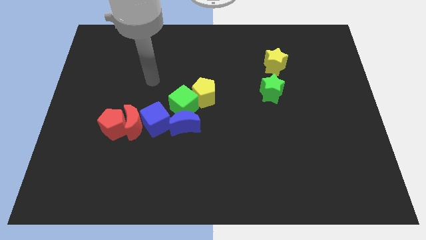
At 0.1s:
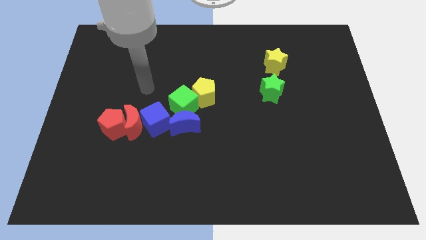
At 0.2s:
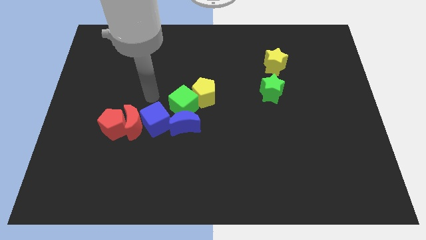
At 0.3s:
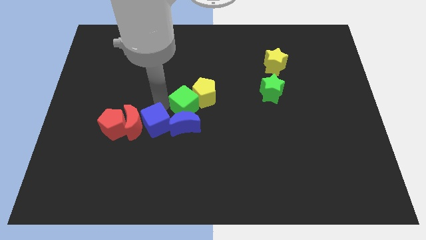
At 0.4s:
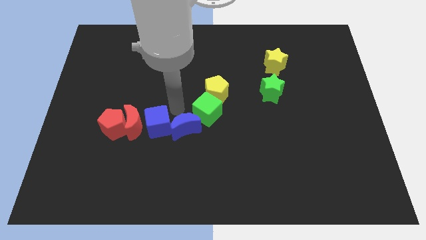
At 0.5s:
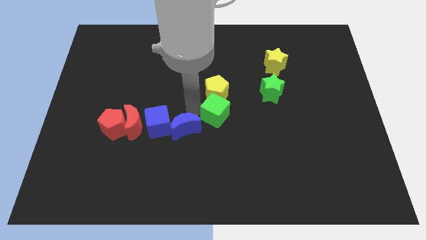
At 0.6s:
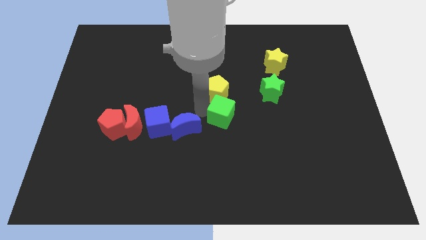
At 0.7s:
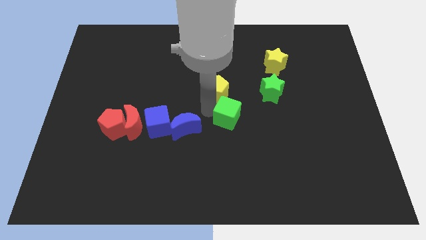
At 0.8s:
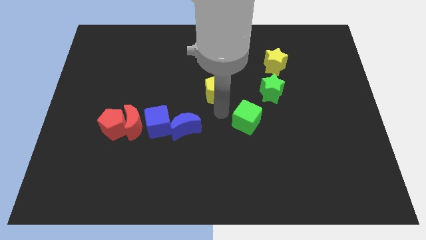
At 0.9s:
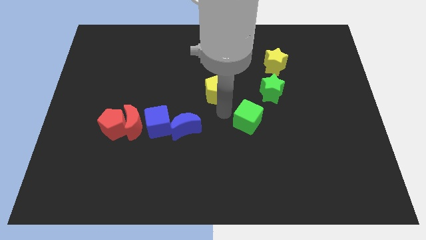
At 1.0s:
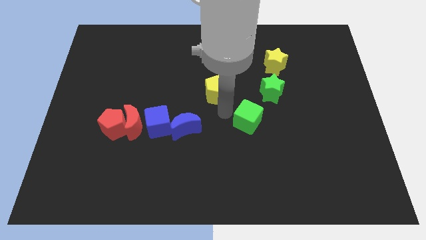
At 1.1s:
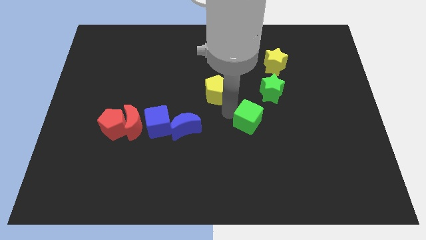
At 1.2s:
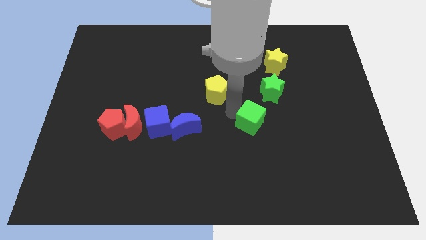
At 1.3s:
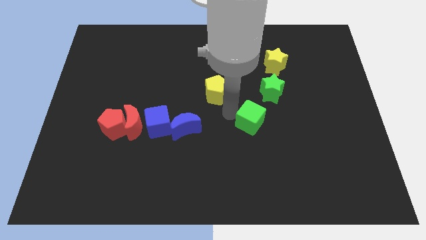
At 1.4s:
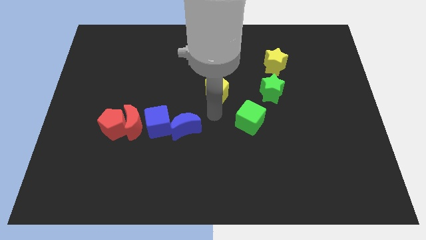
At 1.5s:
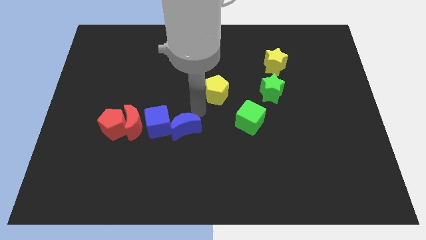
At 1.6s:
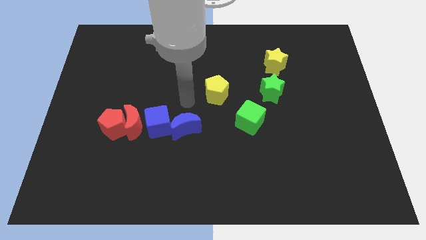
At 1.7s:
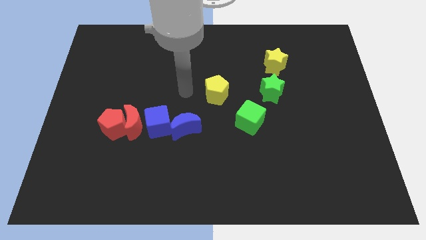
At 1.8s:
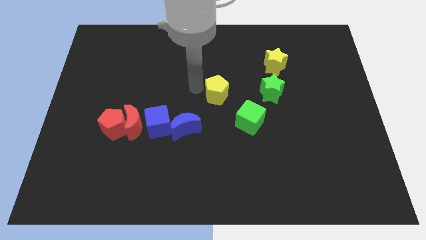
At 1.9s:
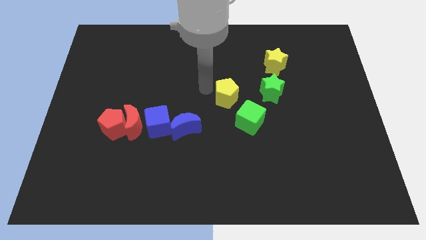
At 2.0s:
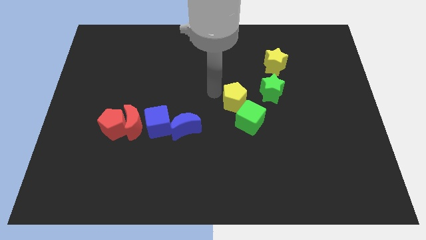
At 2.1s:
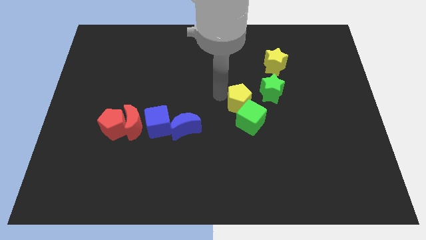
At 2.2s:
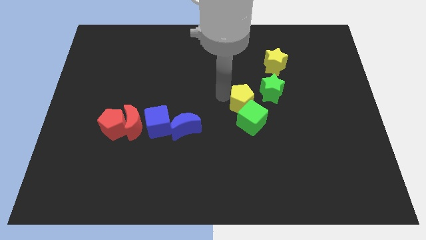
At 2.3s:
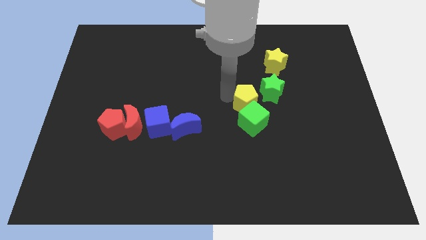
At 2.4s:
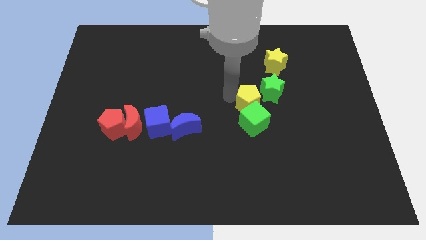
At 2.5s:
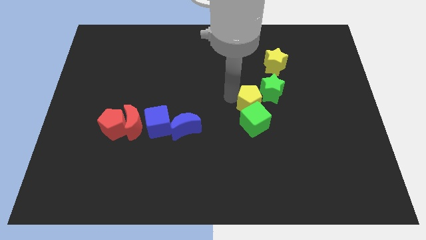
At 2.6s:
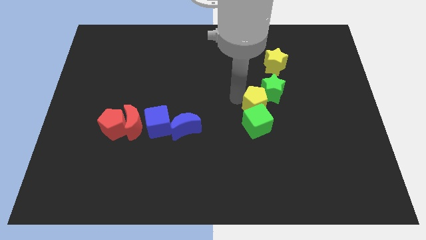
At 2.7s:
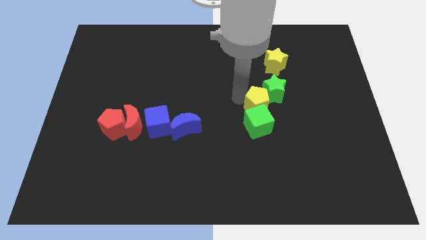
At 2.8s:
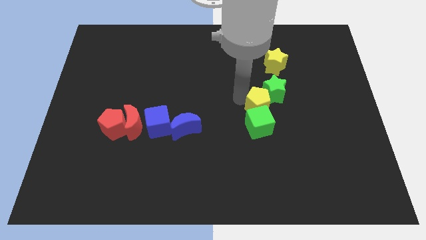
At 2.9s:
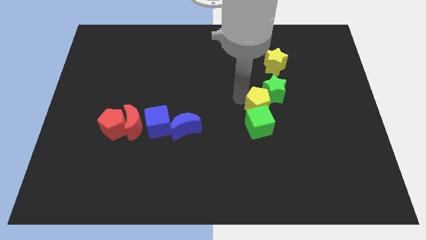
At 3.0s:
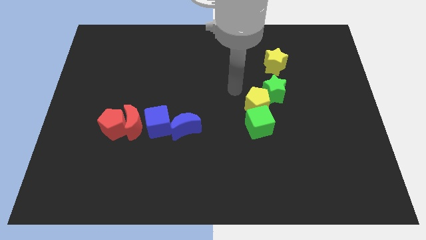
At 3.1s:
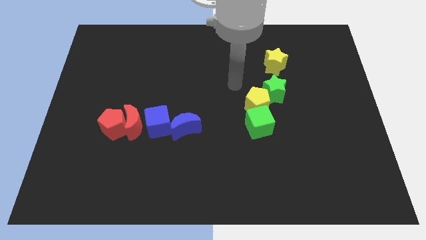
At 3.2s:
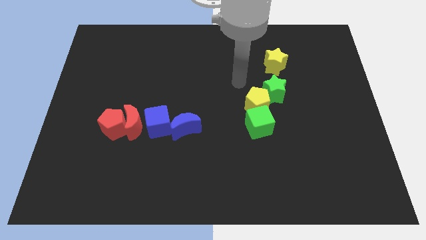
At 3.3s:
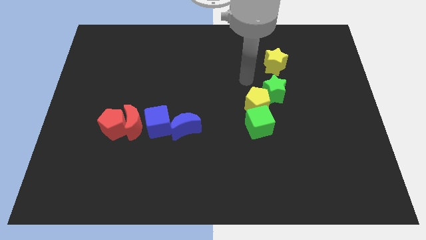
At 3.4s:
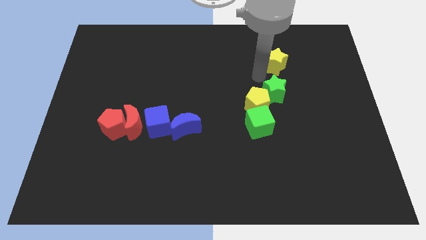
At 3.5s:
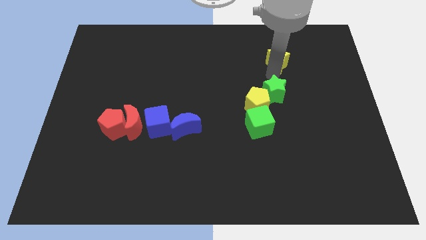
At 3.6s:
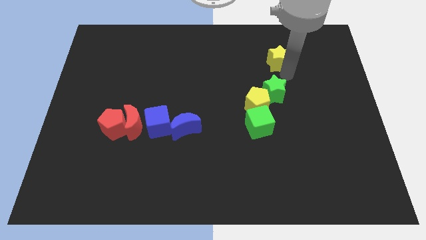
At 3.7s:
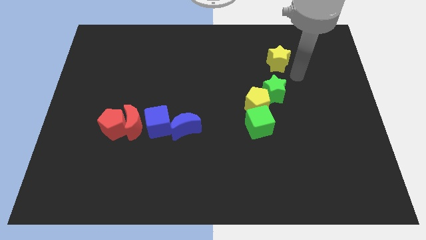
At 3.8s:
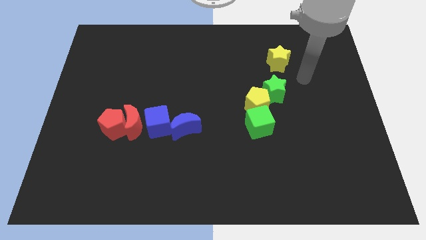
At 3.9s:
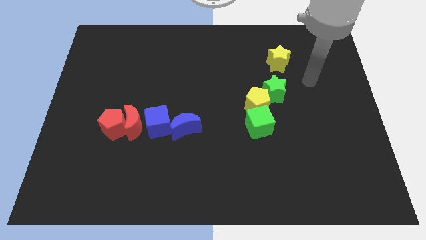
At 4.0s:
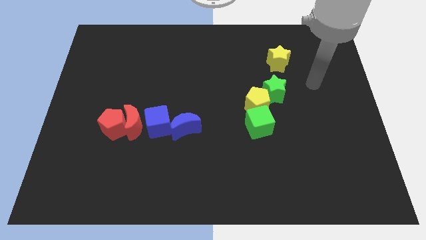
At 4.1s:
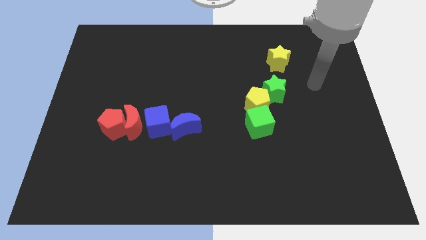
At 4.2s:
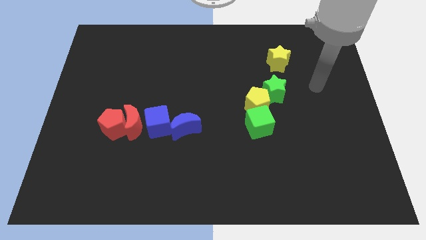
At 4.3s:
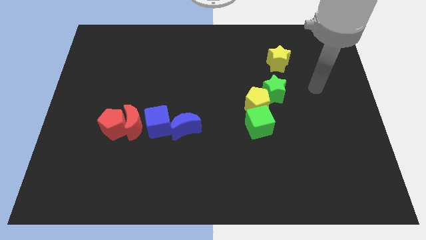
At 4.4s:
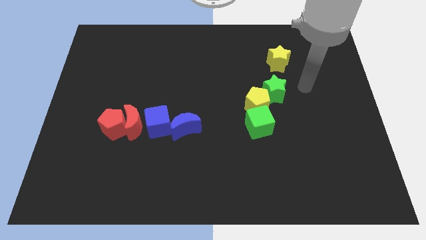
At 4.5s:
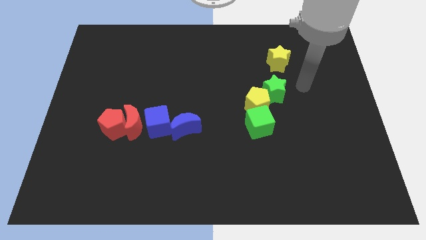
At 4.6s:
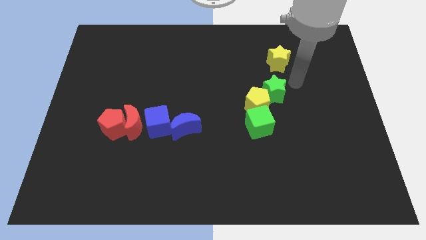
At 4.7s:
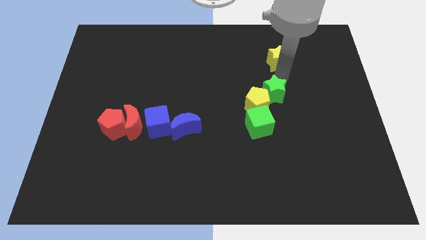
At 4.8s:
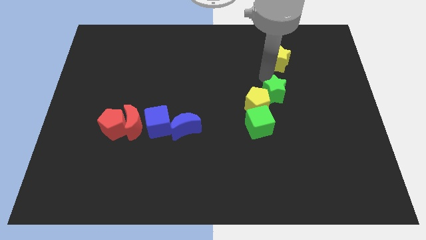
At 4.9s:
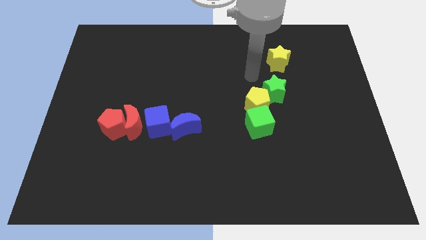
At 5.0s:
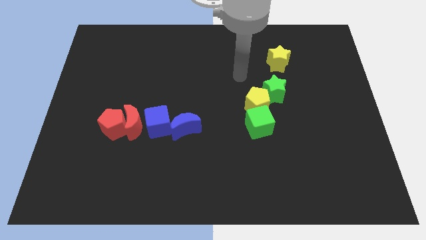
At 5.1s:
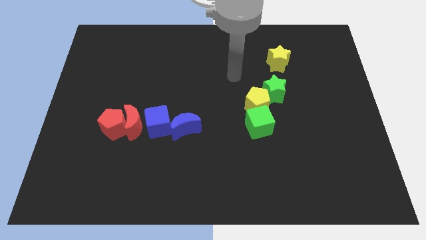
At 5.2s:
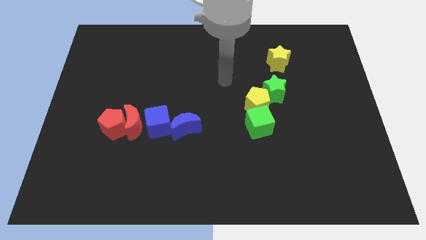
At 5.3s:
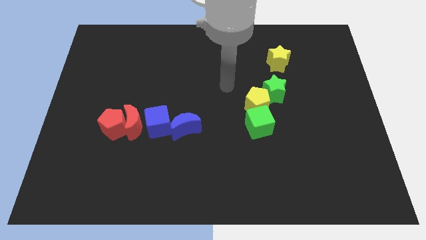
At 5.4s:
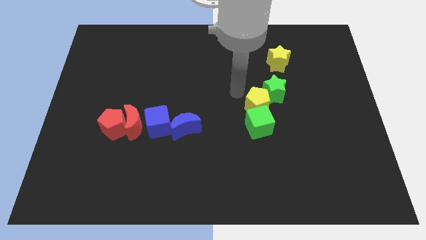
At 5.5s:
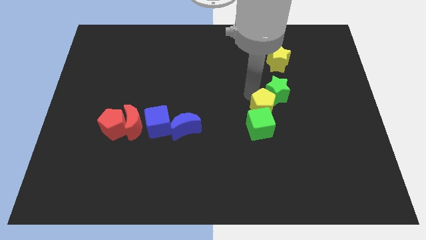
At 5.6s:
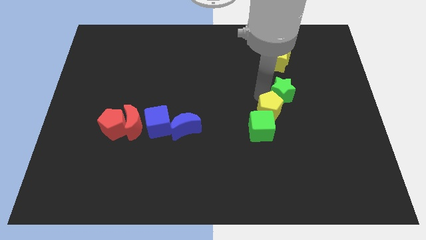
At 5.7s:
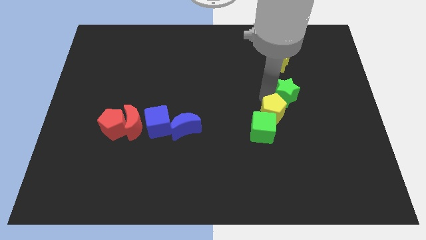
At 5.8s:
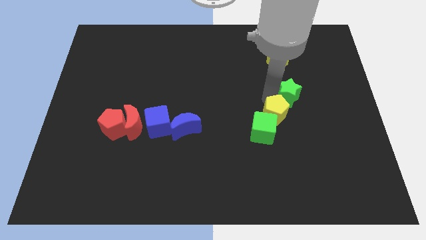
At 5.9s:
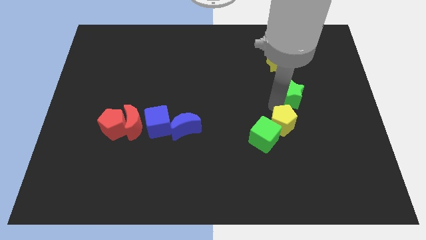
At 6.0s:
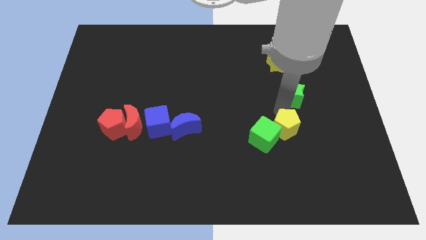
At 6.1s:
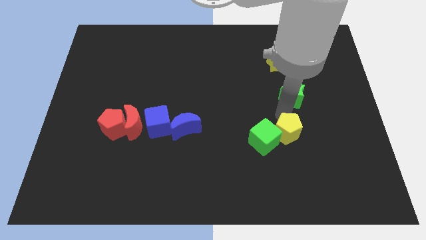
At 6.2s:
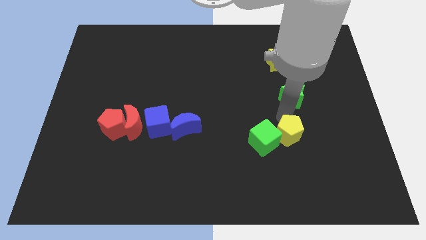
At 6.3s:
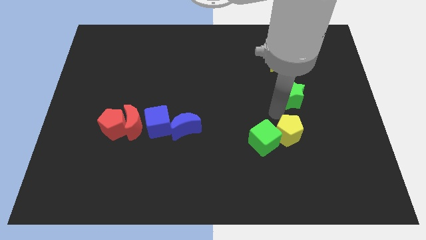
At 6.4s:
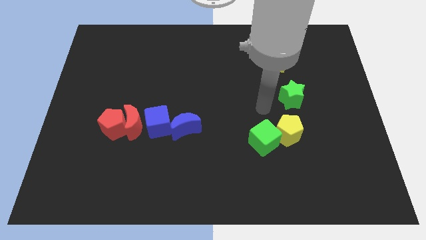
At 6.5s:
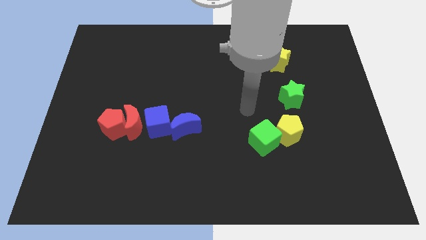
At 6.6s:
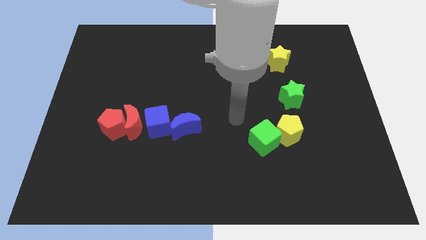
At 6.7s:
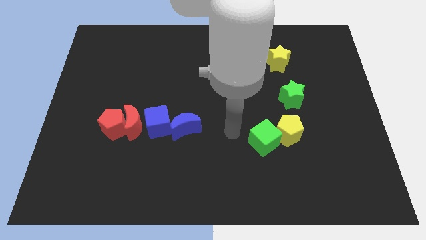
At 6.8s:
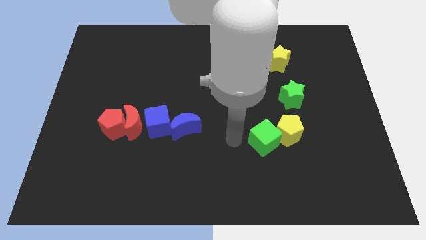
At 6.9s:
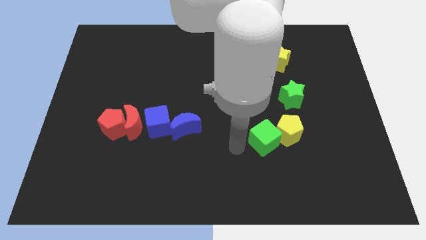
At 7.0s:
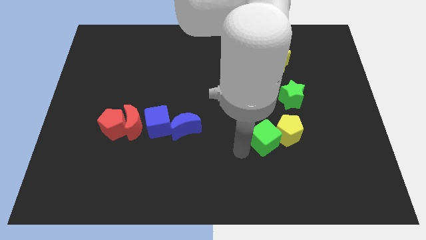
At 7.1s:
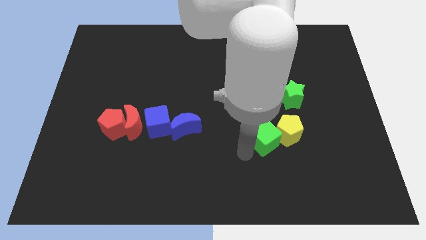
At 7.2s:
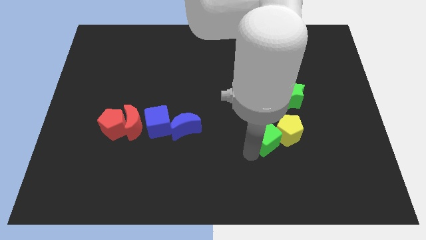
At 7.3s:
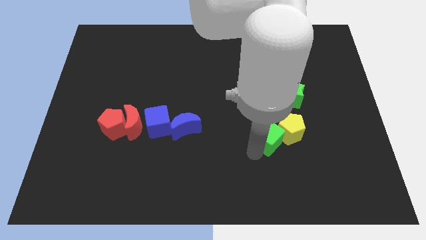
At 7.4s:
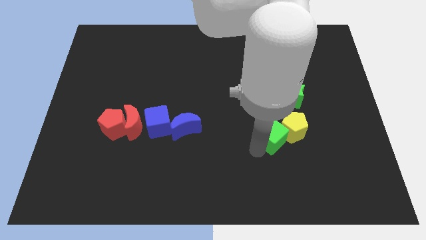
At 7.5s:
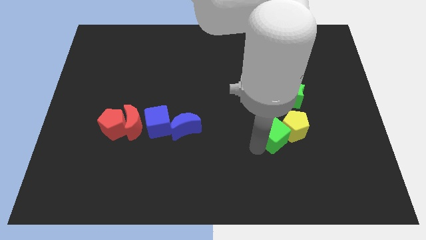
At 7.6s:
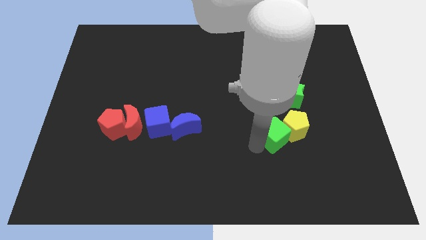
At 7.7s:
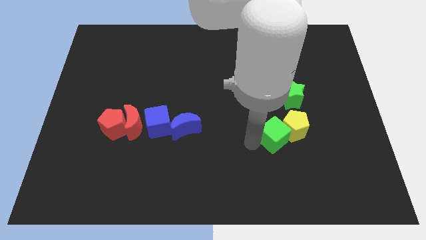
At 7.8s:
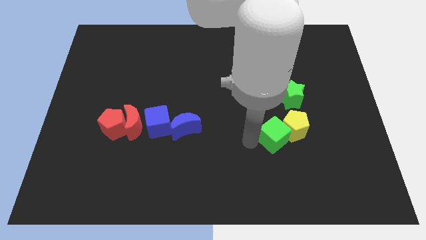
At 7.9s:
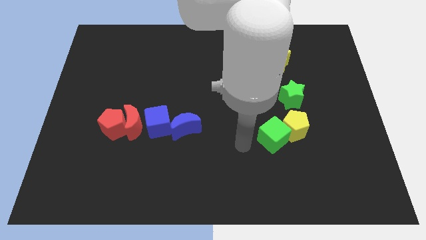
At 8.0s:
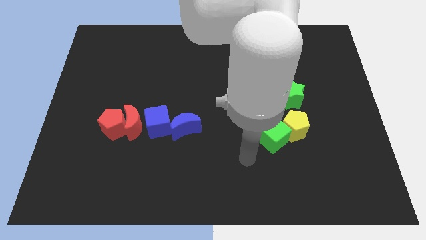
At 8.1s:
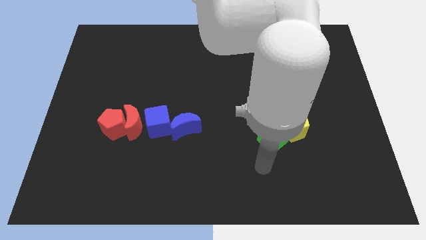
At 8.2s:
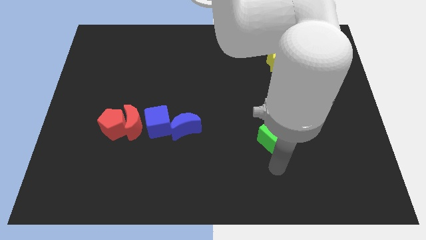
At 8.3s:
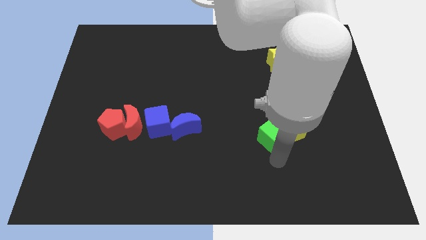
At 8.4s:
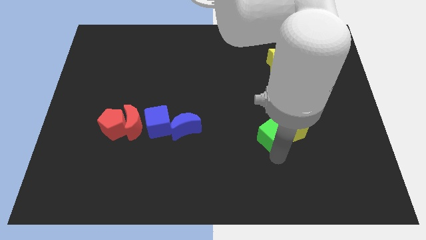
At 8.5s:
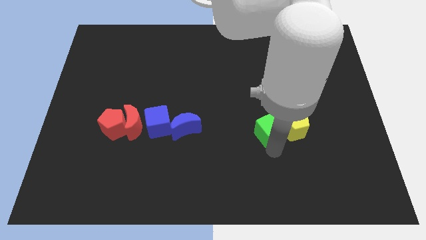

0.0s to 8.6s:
move the green cube and the yellow pentagon to the bottom of the green star

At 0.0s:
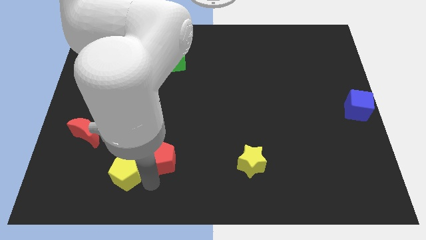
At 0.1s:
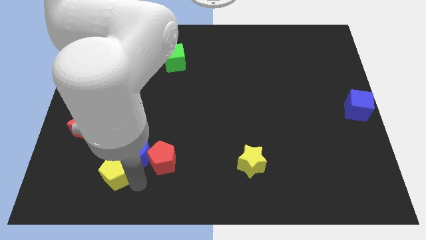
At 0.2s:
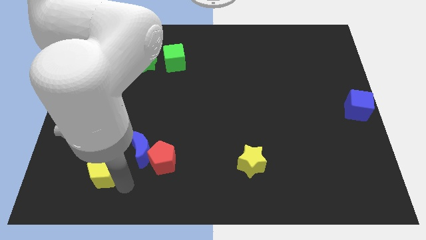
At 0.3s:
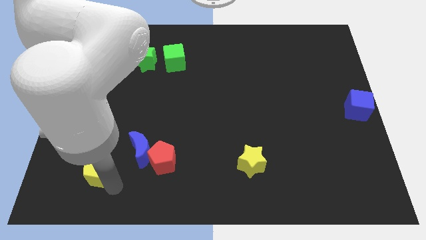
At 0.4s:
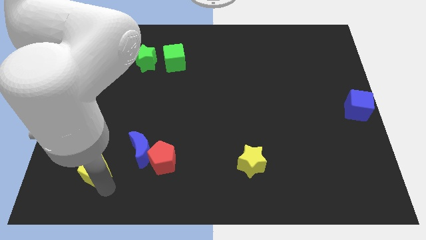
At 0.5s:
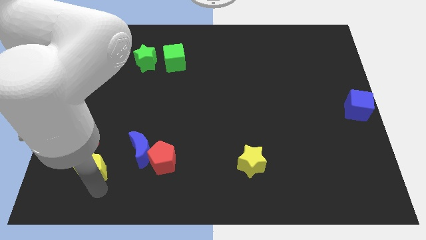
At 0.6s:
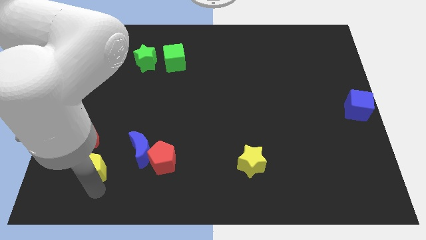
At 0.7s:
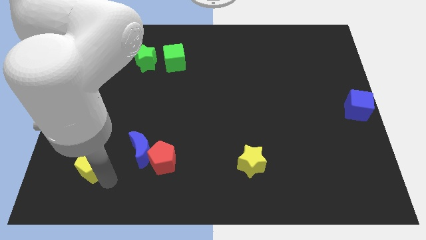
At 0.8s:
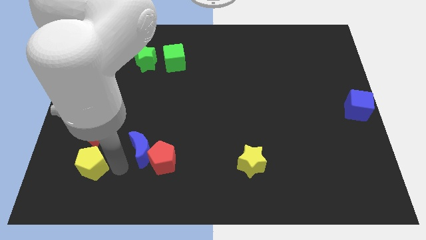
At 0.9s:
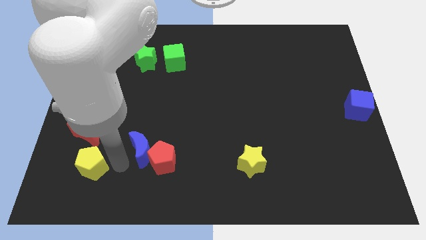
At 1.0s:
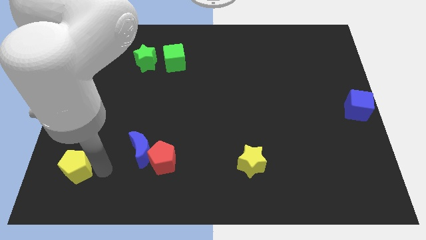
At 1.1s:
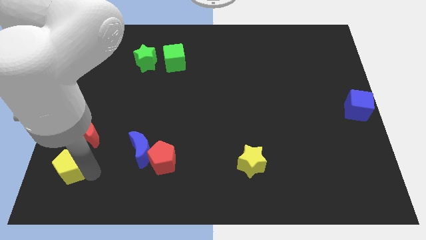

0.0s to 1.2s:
separate the yellow pentagon from the blue crescent
